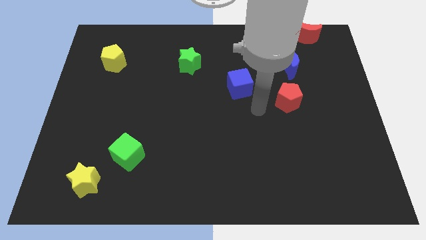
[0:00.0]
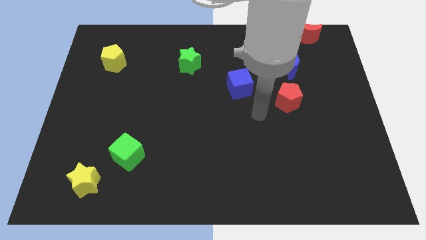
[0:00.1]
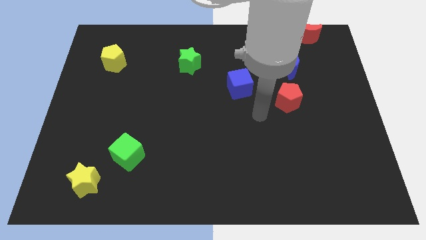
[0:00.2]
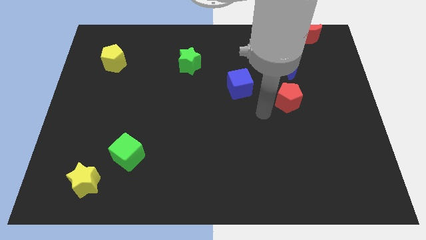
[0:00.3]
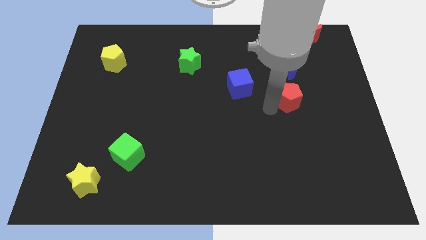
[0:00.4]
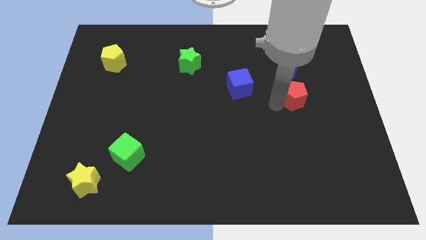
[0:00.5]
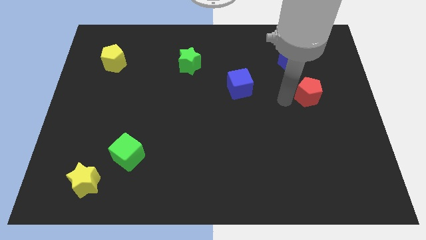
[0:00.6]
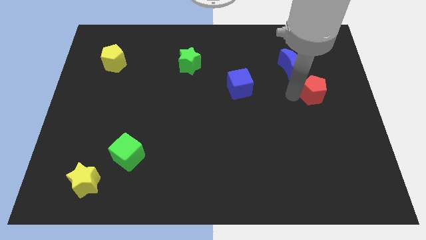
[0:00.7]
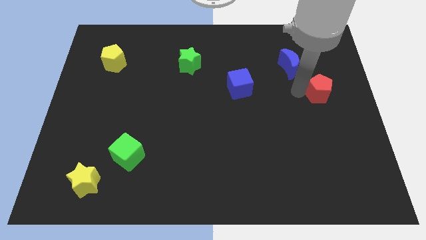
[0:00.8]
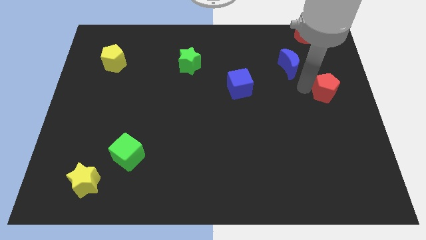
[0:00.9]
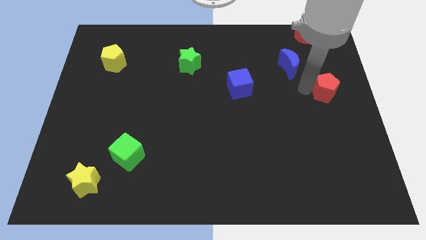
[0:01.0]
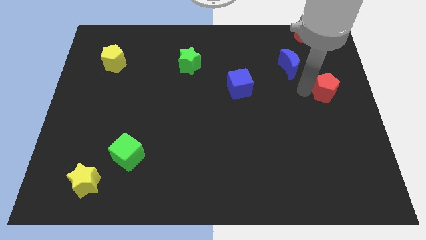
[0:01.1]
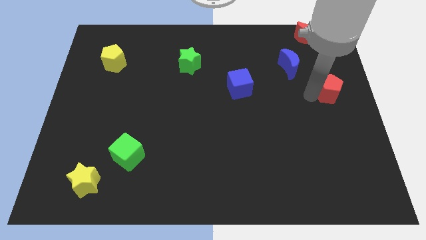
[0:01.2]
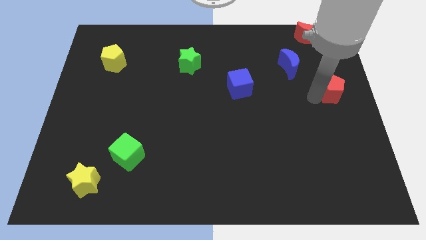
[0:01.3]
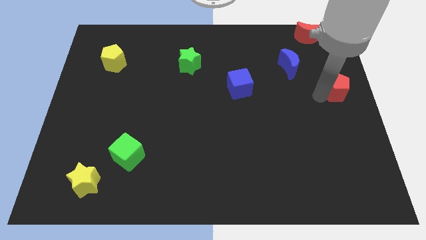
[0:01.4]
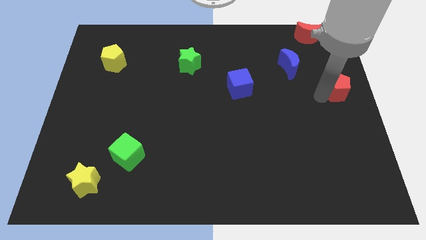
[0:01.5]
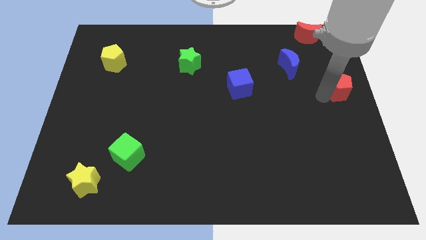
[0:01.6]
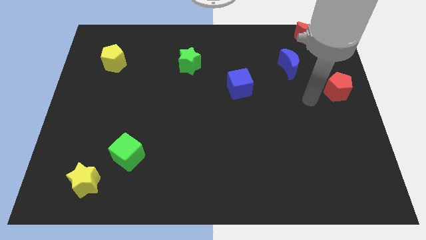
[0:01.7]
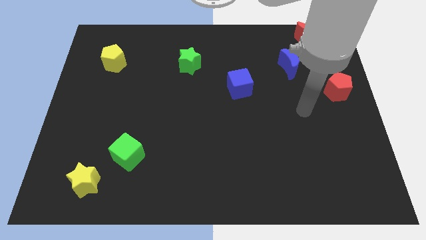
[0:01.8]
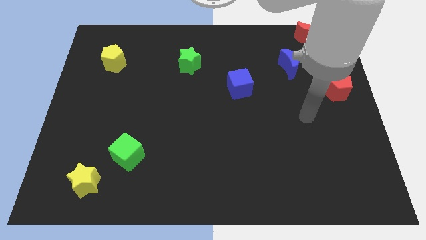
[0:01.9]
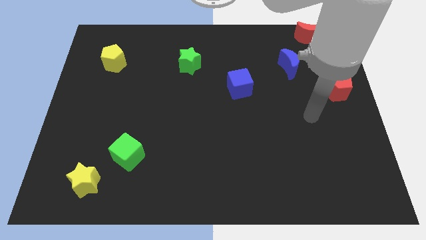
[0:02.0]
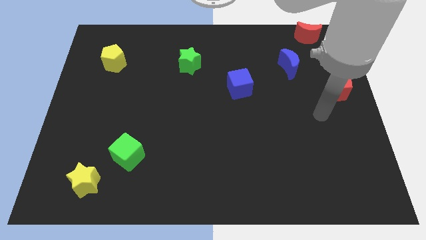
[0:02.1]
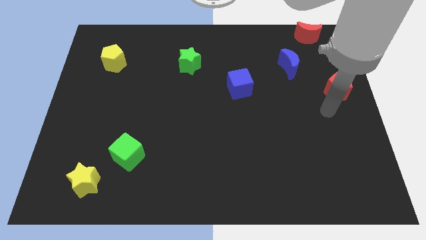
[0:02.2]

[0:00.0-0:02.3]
push the red pentagon towards the center right

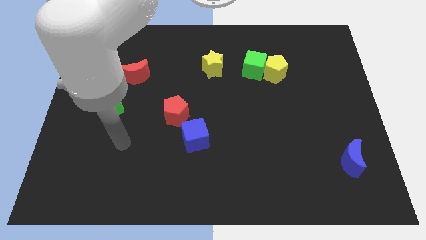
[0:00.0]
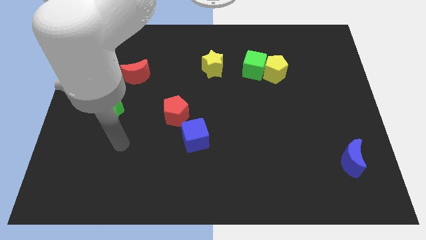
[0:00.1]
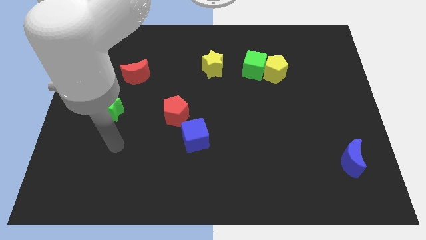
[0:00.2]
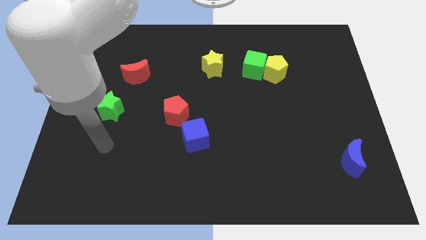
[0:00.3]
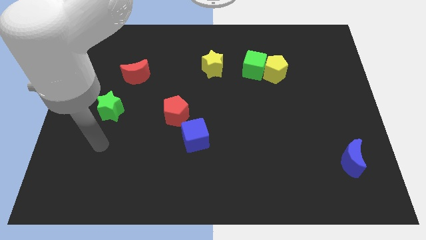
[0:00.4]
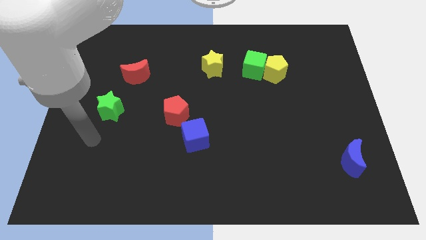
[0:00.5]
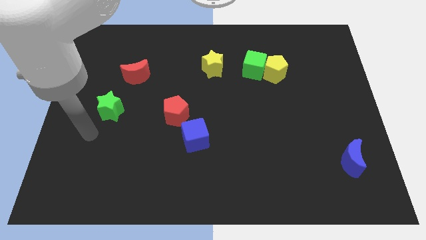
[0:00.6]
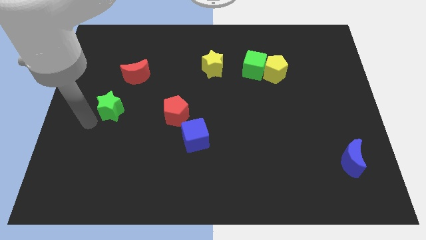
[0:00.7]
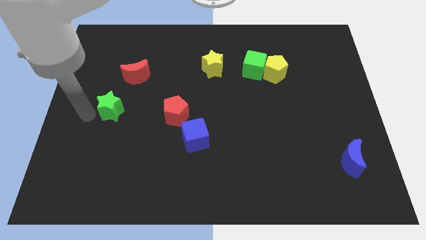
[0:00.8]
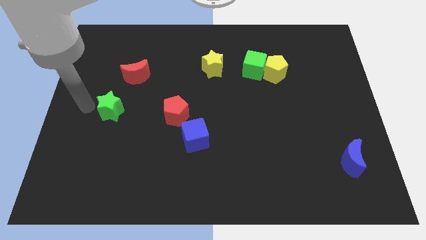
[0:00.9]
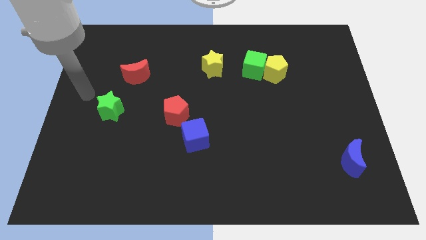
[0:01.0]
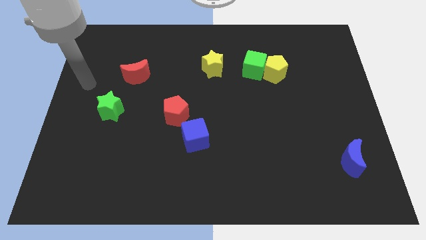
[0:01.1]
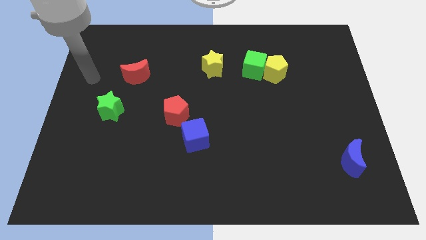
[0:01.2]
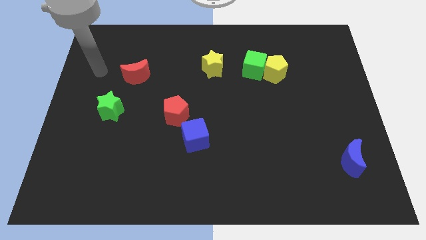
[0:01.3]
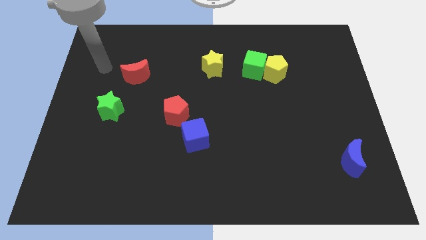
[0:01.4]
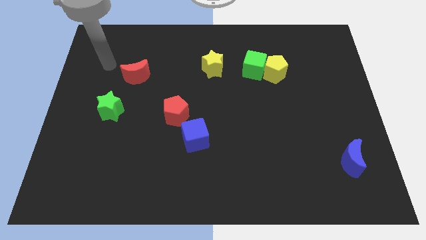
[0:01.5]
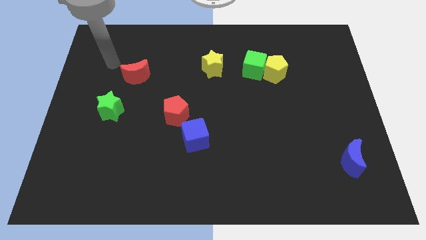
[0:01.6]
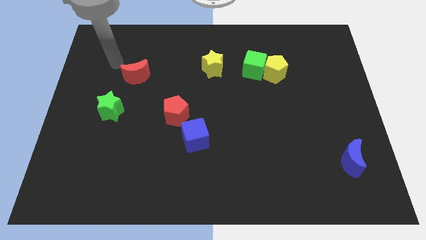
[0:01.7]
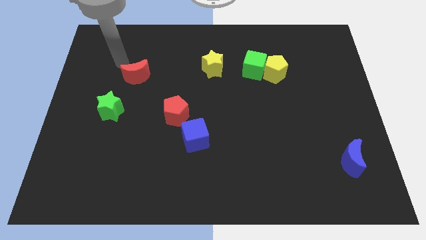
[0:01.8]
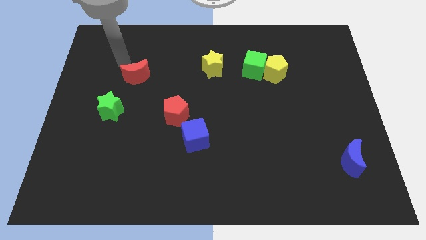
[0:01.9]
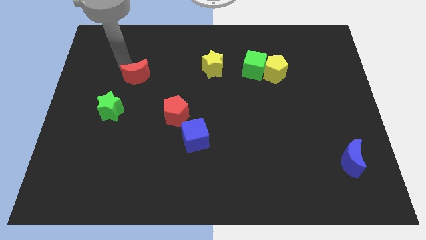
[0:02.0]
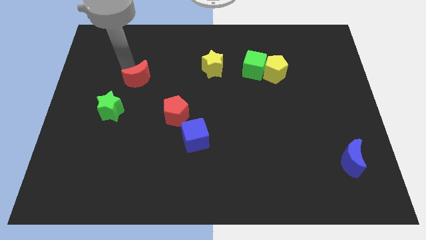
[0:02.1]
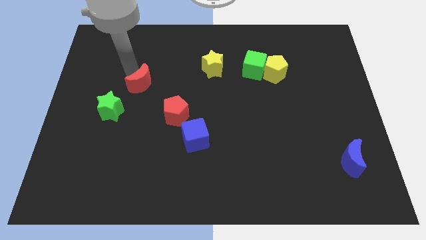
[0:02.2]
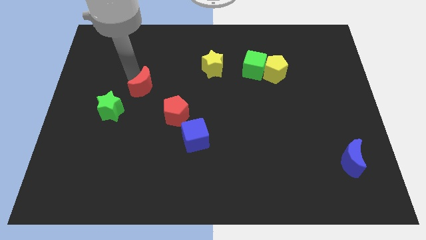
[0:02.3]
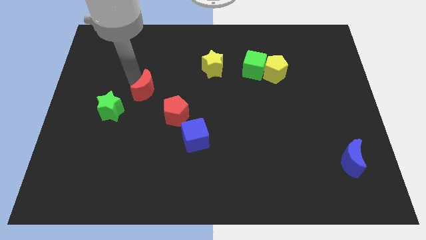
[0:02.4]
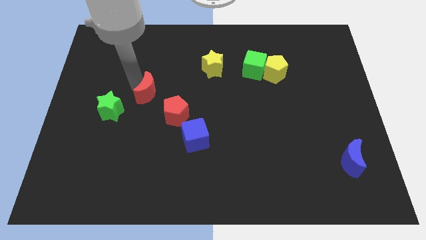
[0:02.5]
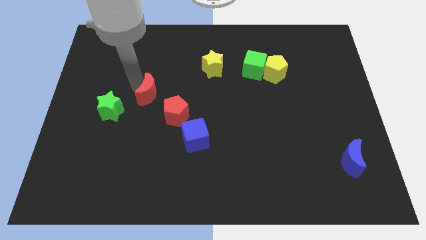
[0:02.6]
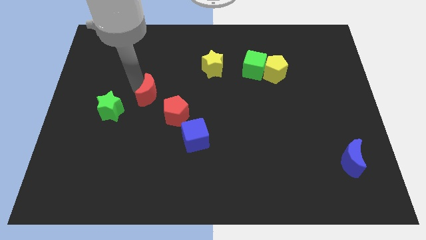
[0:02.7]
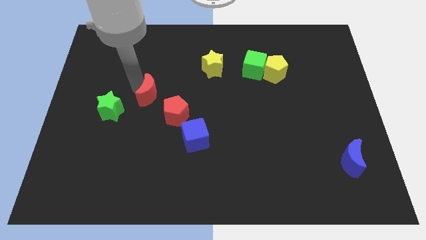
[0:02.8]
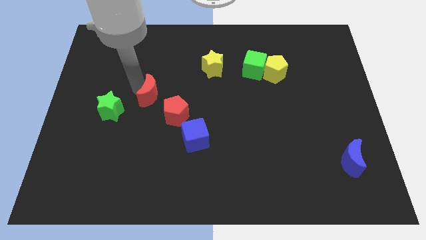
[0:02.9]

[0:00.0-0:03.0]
move the red pentagon to the bottom of the board

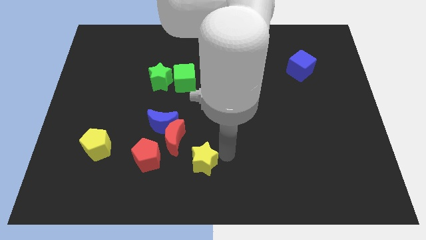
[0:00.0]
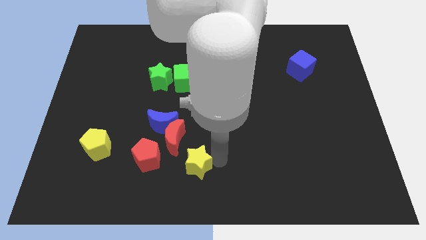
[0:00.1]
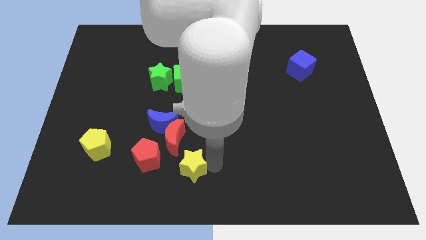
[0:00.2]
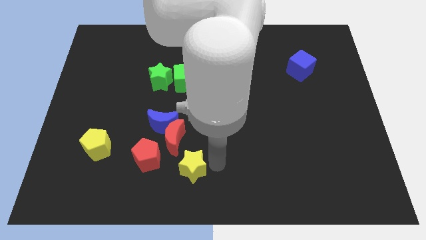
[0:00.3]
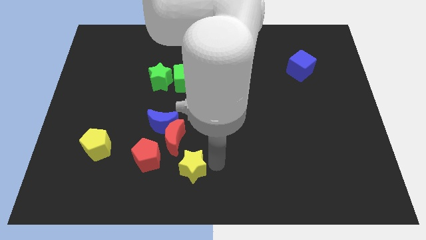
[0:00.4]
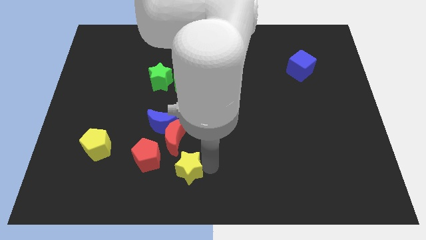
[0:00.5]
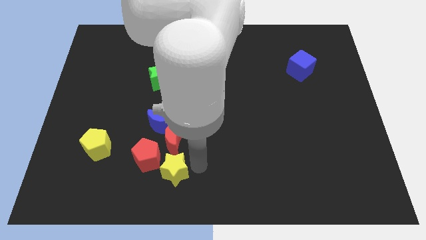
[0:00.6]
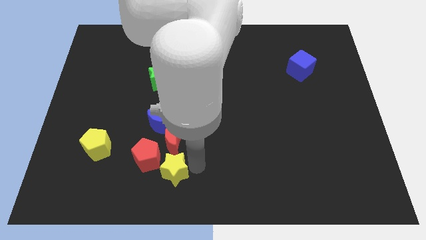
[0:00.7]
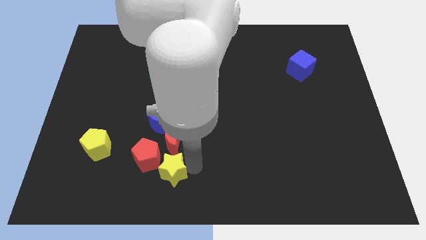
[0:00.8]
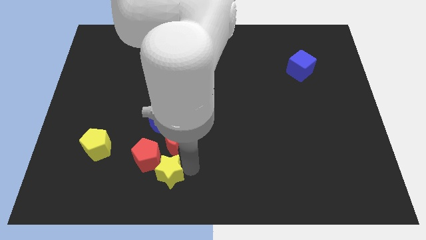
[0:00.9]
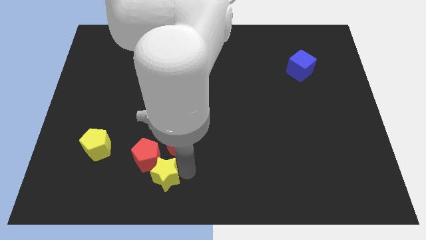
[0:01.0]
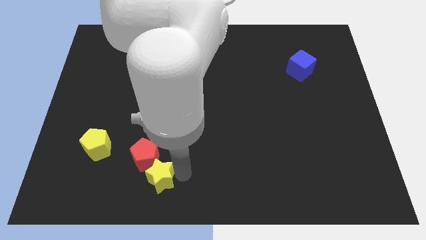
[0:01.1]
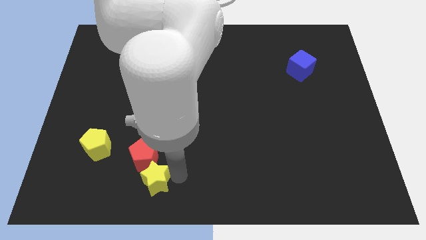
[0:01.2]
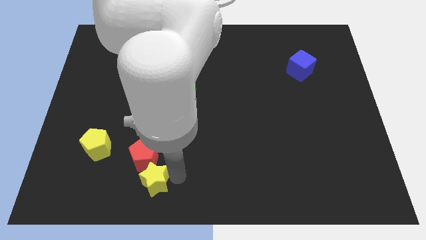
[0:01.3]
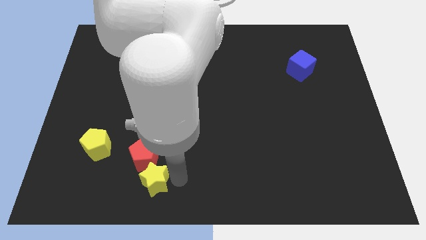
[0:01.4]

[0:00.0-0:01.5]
move the yellow star into the red pentagon

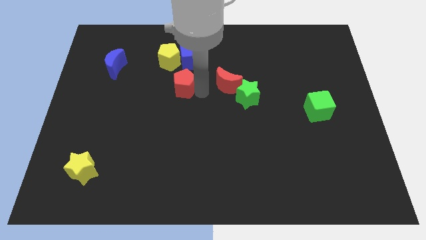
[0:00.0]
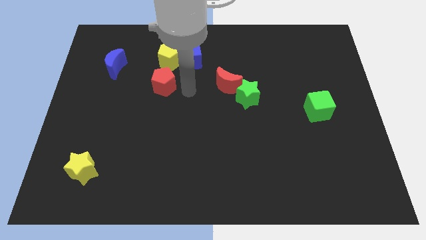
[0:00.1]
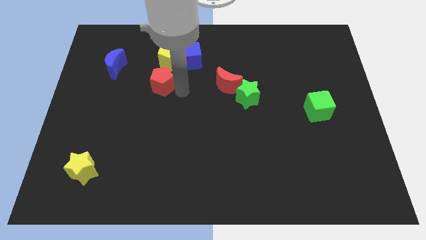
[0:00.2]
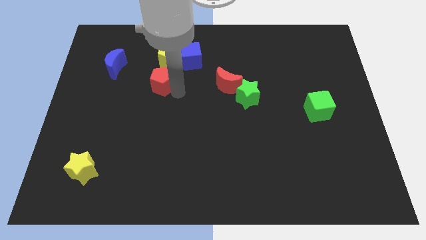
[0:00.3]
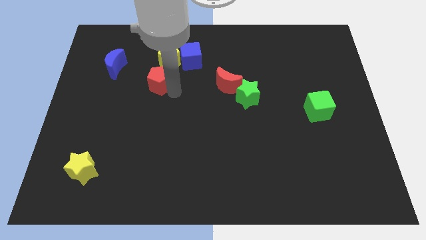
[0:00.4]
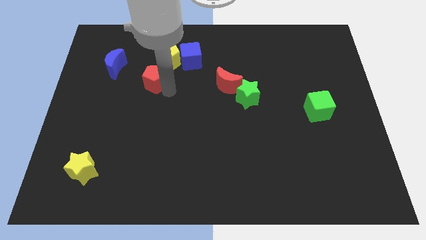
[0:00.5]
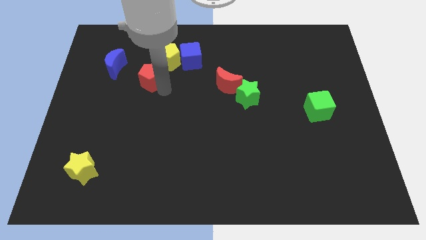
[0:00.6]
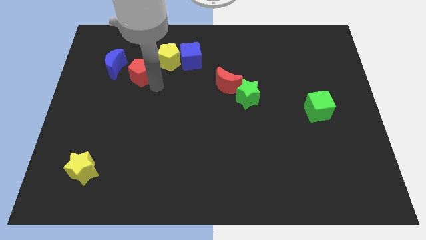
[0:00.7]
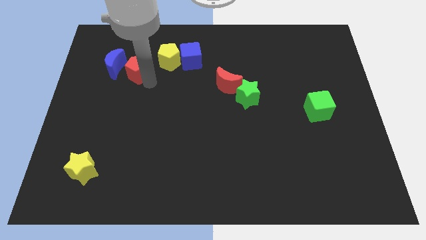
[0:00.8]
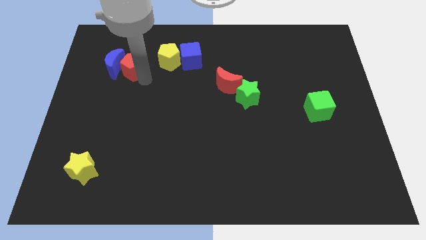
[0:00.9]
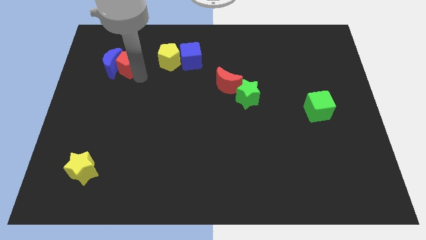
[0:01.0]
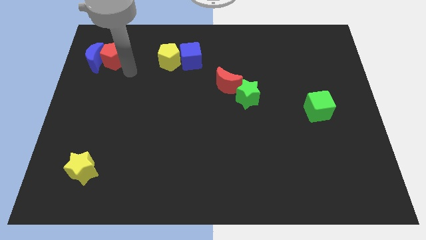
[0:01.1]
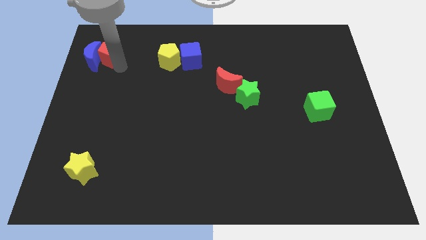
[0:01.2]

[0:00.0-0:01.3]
push the red pentagon into the blue moon

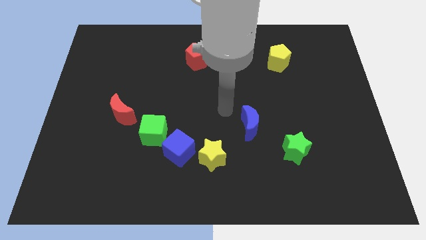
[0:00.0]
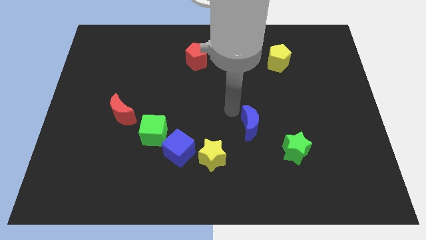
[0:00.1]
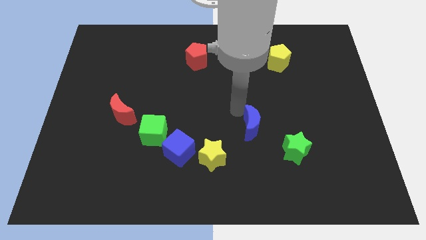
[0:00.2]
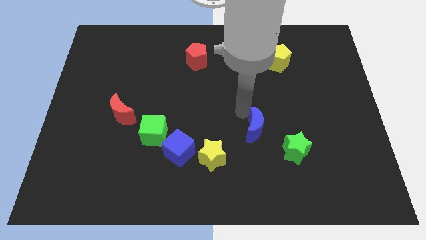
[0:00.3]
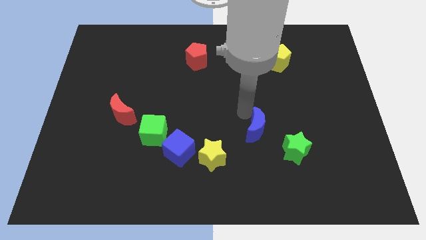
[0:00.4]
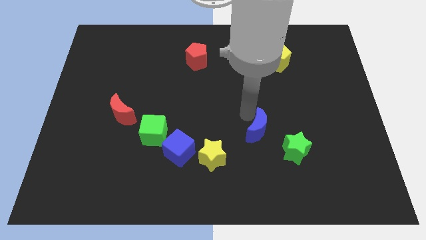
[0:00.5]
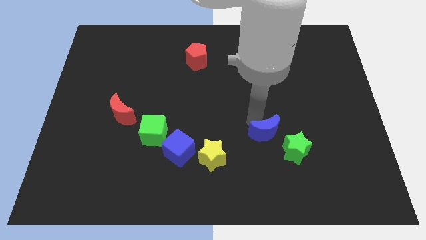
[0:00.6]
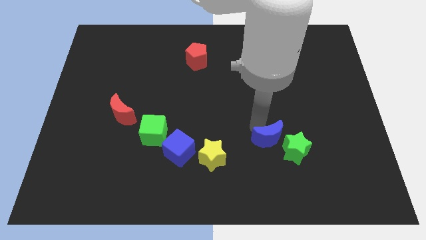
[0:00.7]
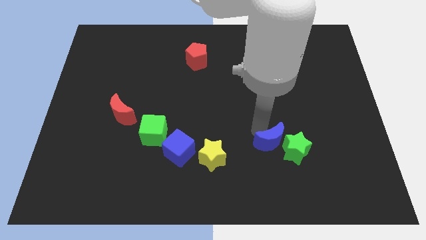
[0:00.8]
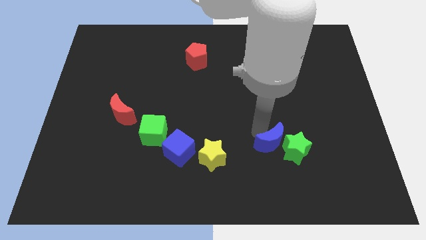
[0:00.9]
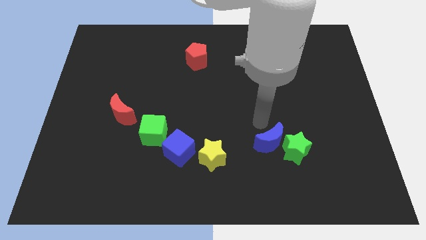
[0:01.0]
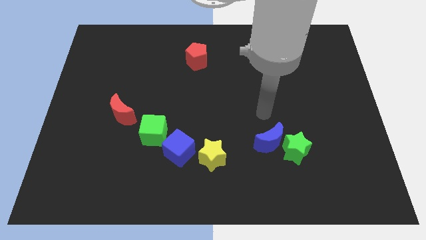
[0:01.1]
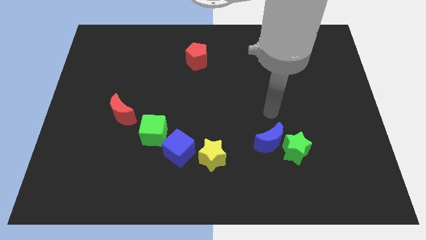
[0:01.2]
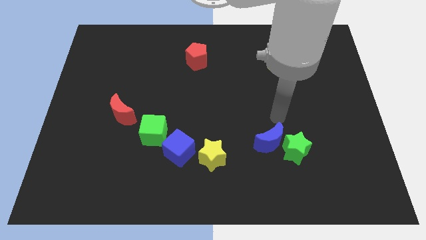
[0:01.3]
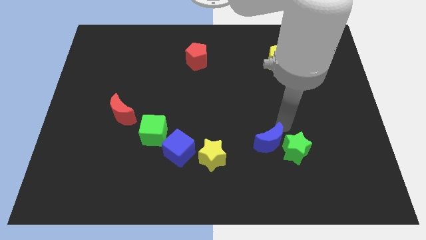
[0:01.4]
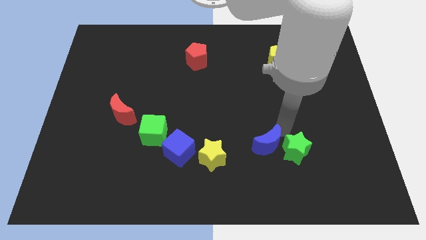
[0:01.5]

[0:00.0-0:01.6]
place the blue crescent to the left of the green star
